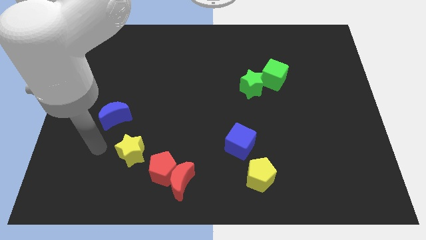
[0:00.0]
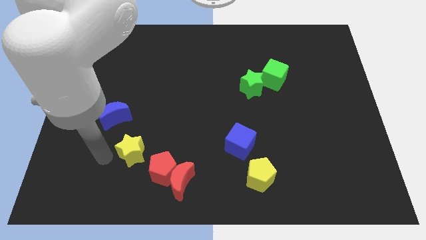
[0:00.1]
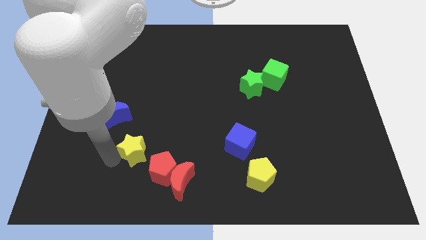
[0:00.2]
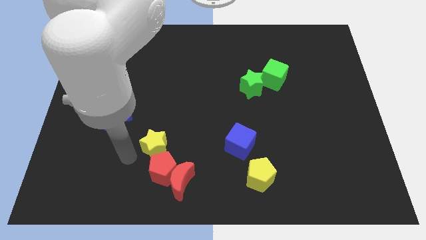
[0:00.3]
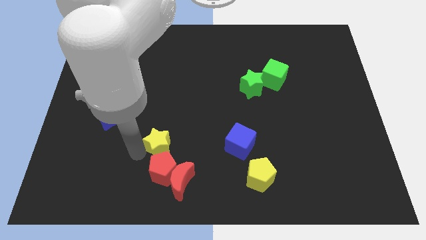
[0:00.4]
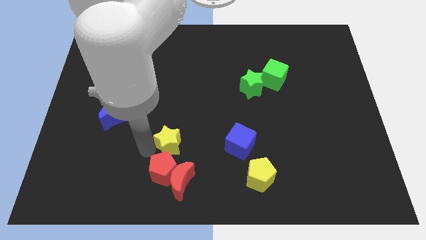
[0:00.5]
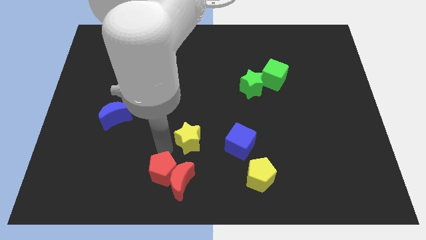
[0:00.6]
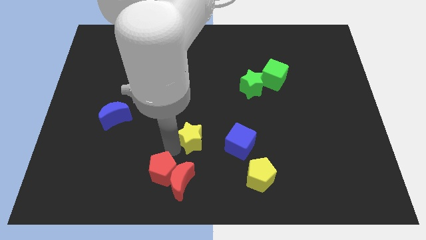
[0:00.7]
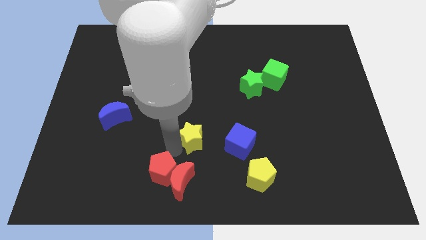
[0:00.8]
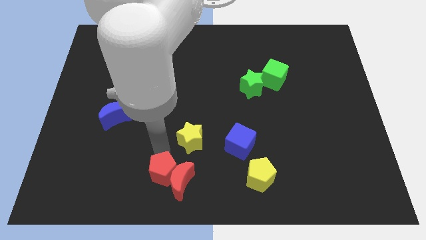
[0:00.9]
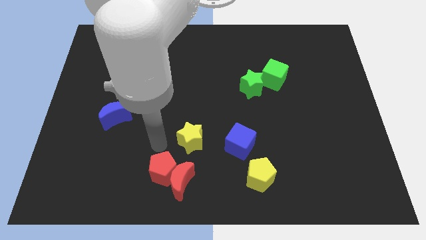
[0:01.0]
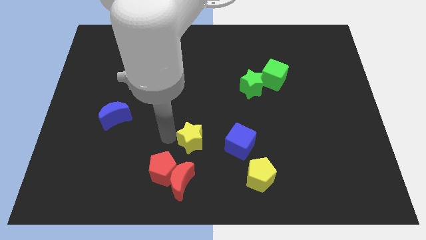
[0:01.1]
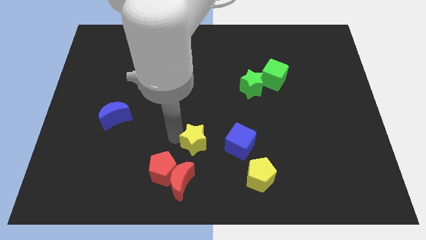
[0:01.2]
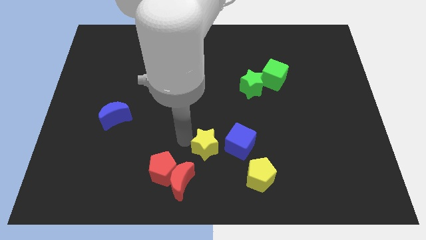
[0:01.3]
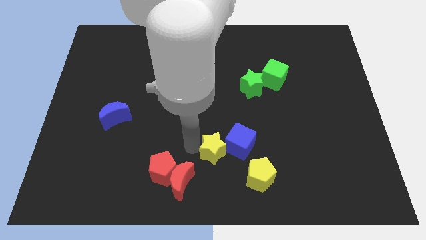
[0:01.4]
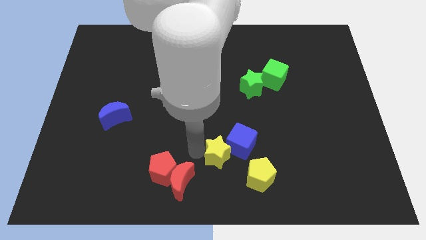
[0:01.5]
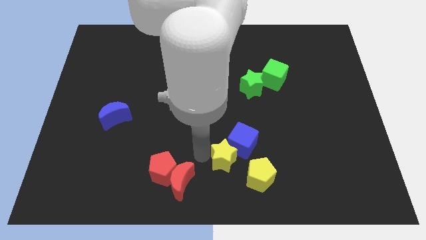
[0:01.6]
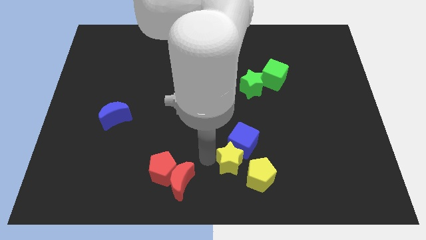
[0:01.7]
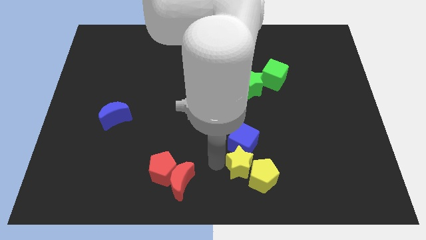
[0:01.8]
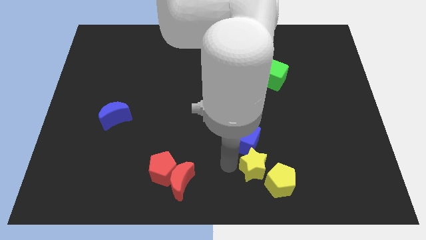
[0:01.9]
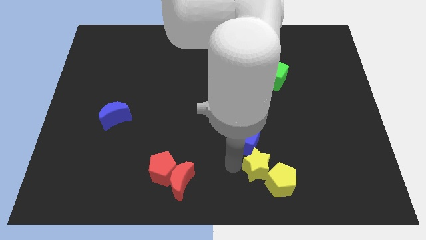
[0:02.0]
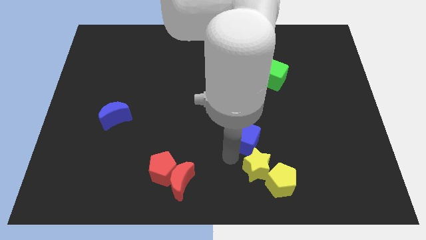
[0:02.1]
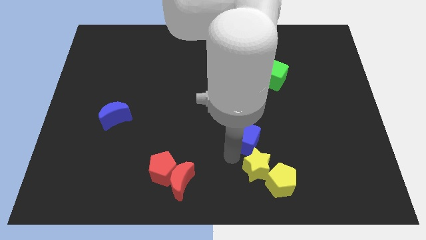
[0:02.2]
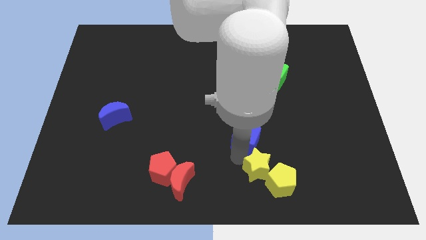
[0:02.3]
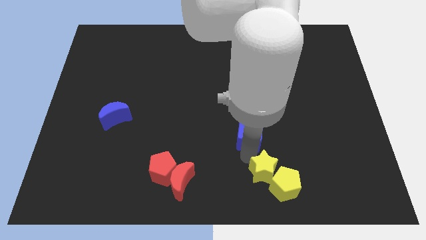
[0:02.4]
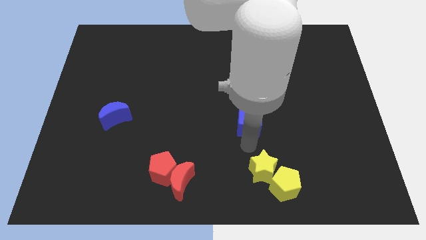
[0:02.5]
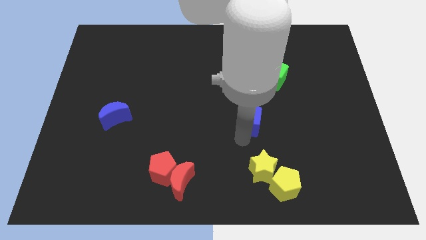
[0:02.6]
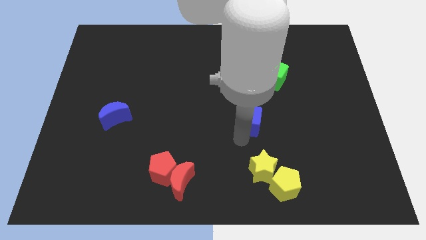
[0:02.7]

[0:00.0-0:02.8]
drag the yellow star and place it above the yellow pentagon

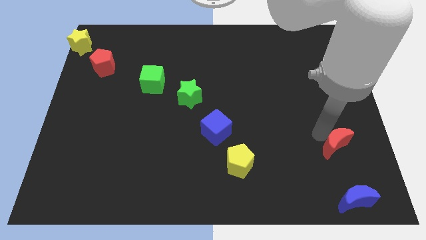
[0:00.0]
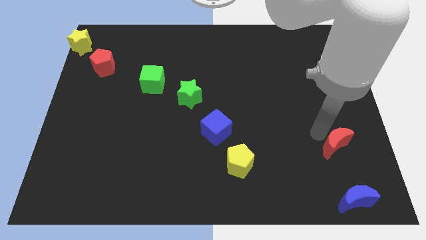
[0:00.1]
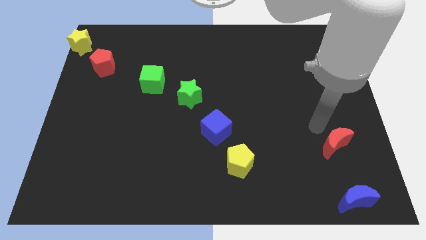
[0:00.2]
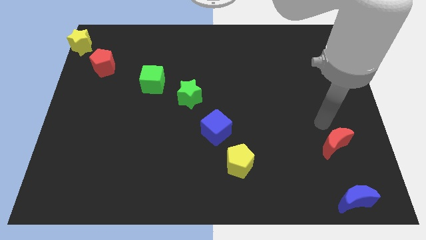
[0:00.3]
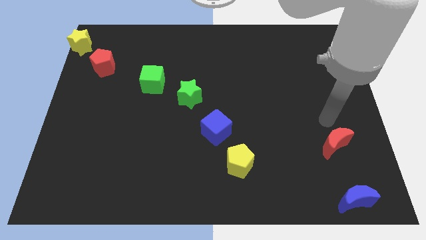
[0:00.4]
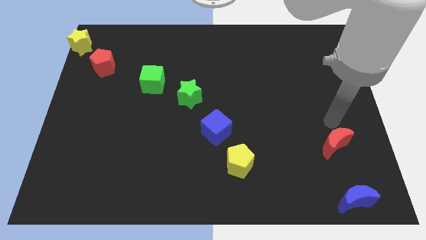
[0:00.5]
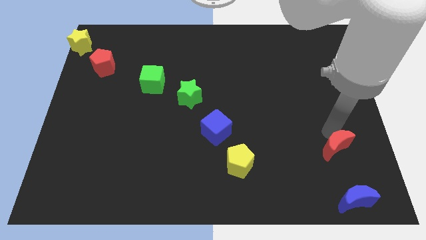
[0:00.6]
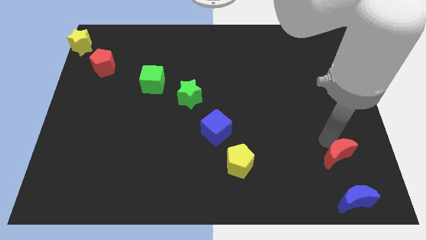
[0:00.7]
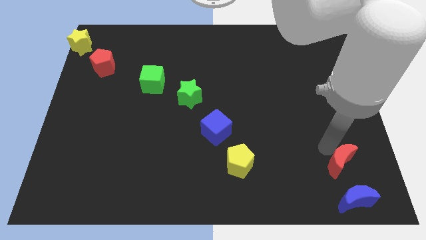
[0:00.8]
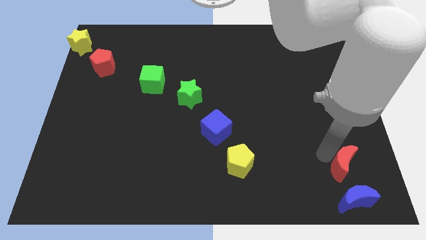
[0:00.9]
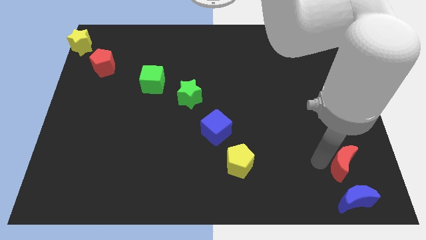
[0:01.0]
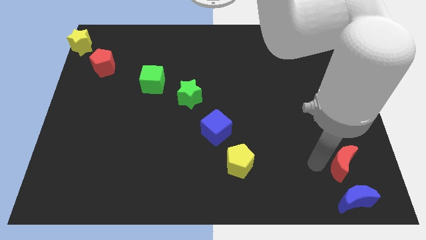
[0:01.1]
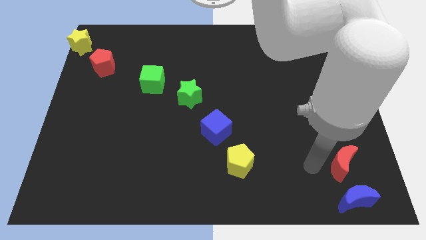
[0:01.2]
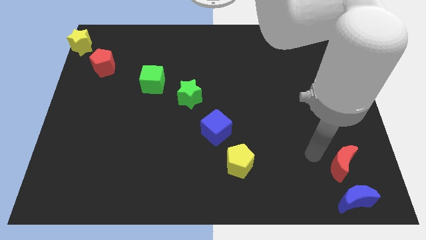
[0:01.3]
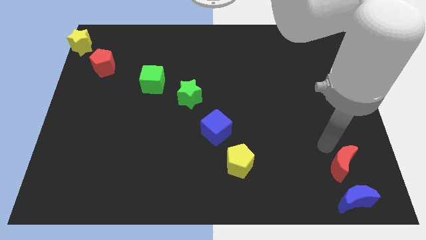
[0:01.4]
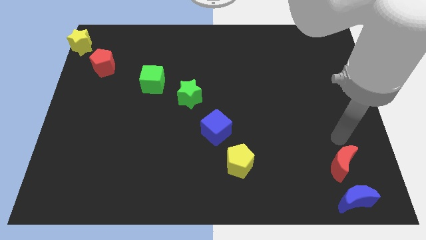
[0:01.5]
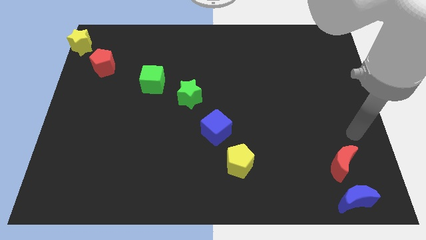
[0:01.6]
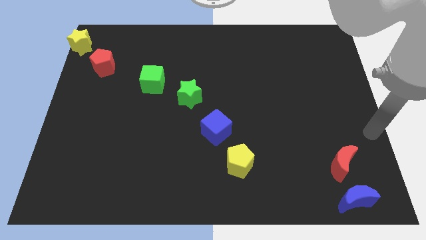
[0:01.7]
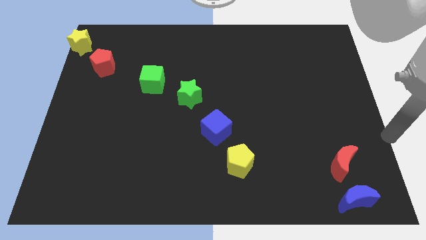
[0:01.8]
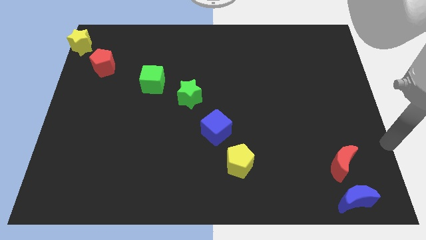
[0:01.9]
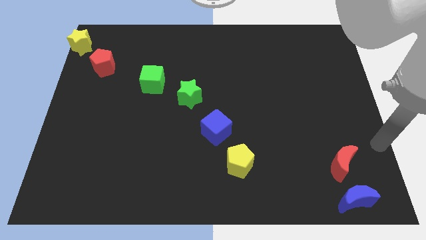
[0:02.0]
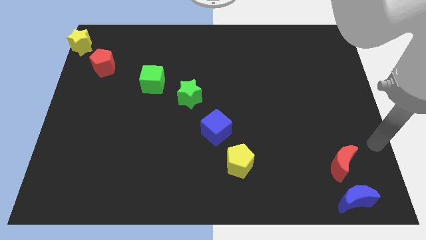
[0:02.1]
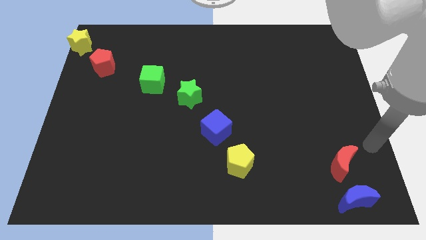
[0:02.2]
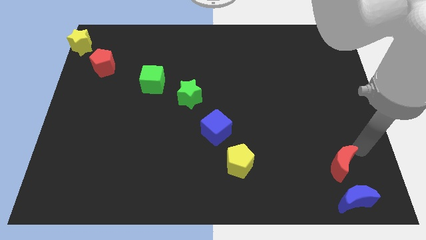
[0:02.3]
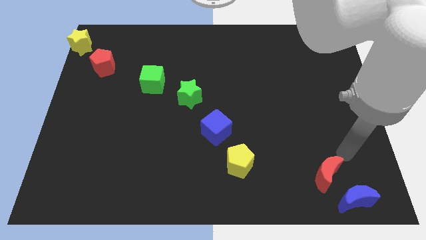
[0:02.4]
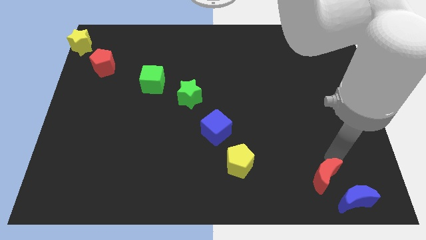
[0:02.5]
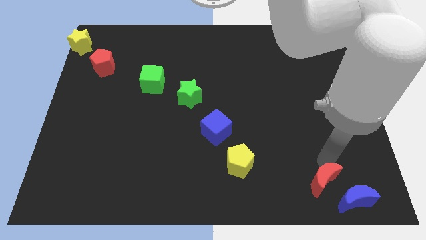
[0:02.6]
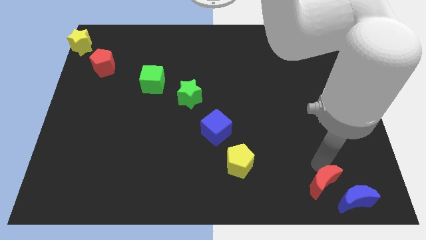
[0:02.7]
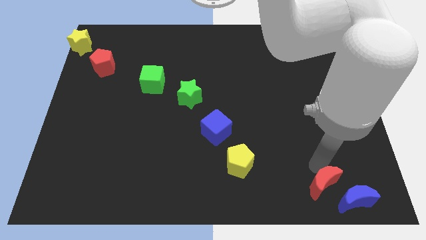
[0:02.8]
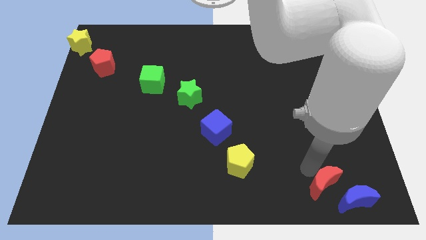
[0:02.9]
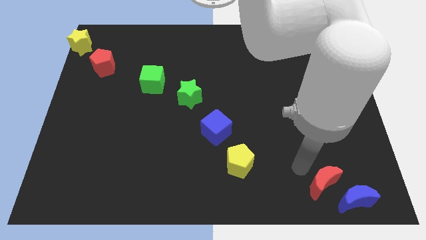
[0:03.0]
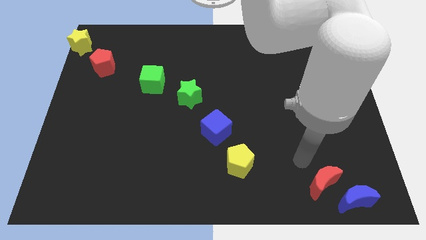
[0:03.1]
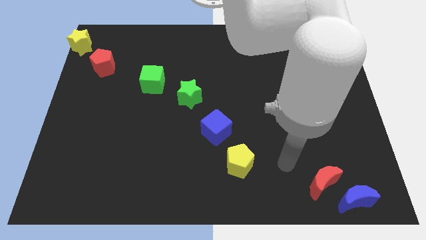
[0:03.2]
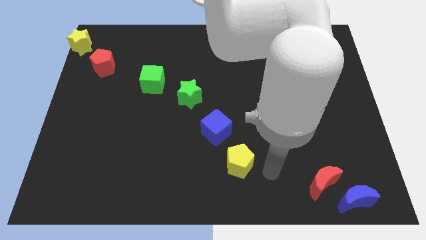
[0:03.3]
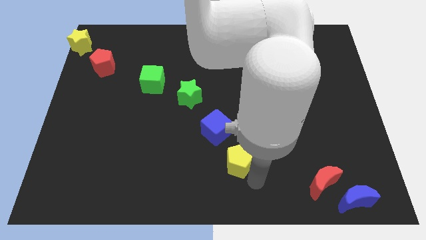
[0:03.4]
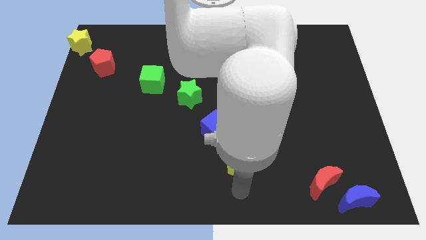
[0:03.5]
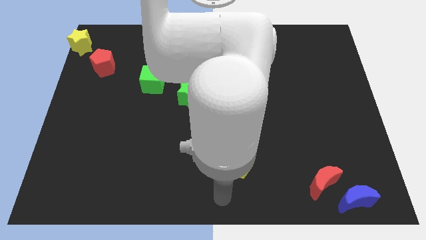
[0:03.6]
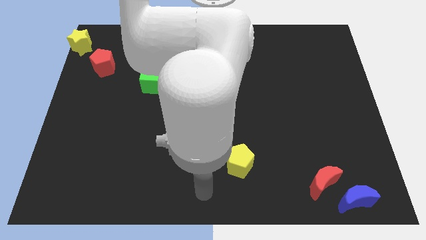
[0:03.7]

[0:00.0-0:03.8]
slide the red moon close to the blue moon

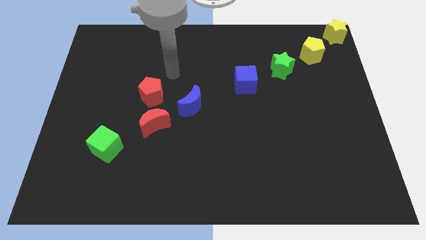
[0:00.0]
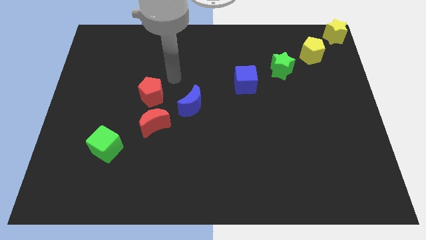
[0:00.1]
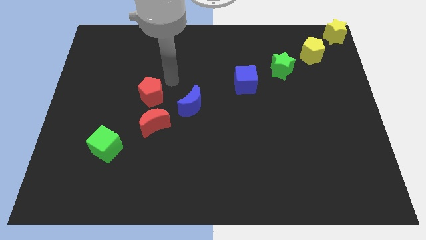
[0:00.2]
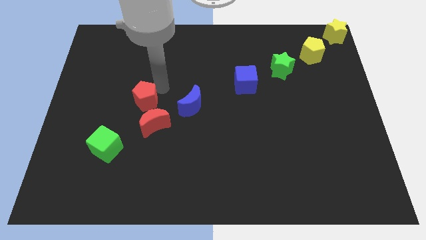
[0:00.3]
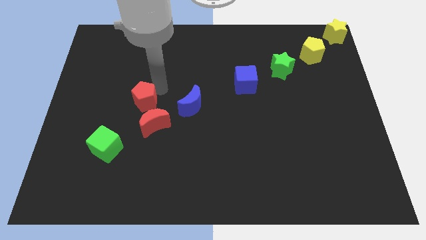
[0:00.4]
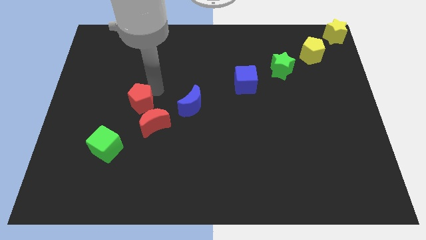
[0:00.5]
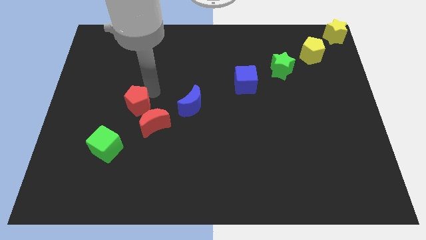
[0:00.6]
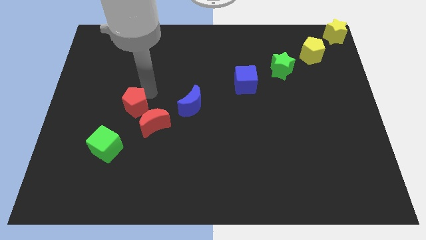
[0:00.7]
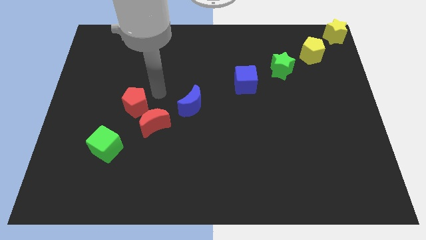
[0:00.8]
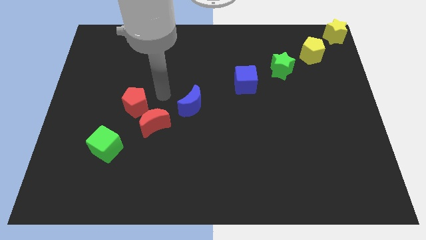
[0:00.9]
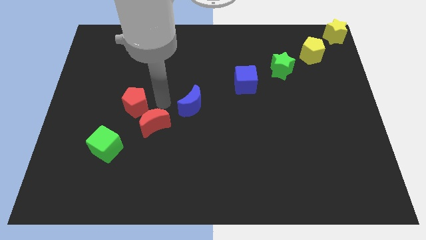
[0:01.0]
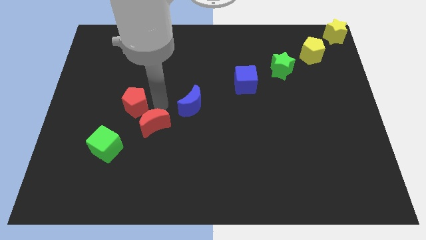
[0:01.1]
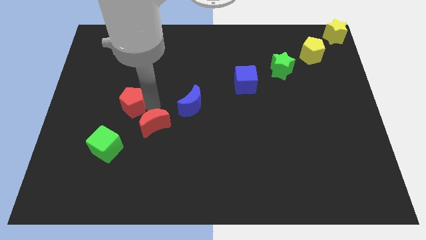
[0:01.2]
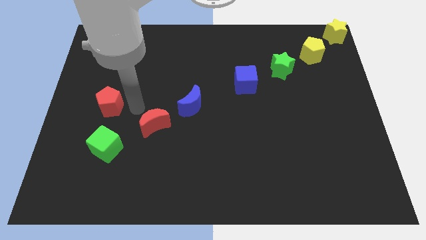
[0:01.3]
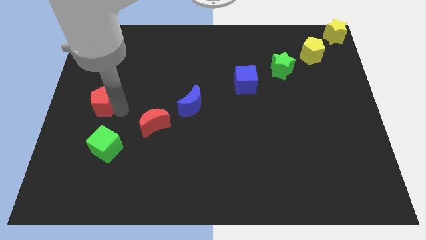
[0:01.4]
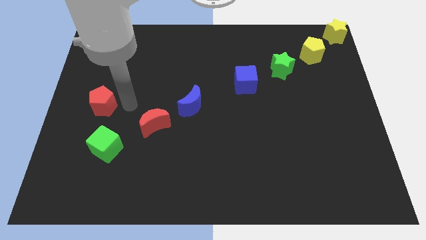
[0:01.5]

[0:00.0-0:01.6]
put the red pentagon above the green cube

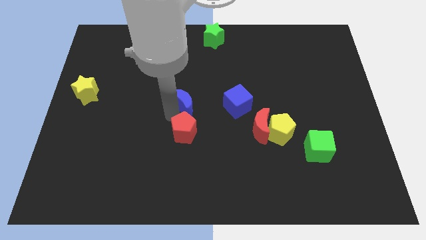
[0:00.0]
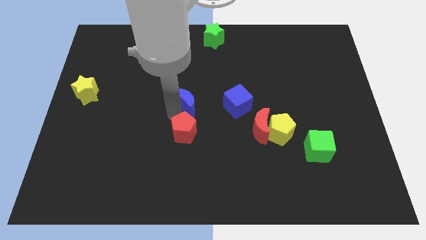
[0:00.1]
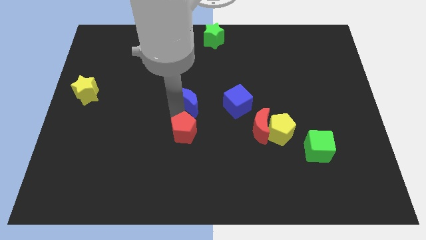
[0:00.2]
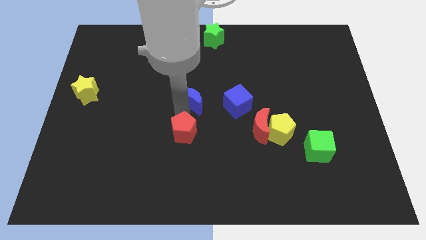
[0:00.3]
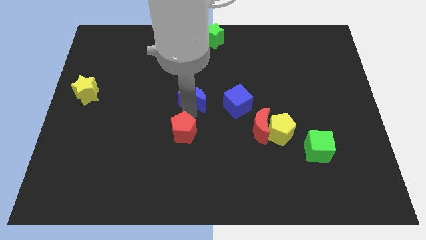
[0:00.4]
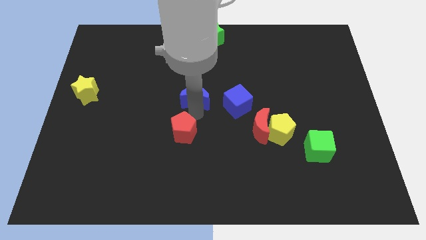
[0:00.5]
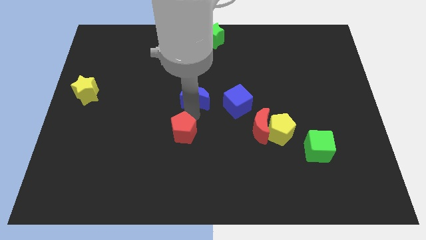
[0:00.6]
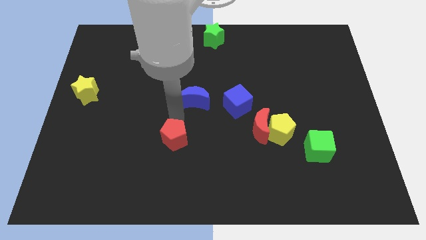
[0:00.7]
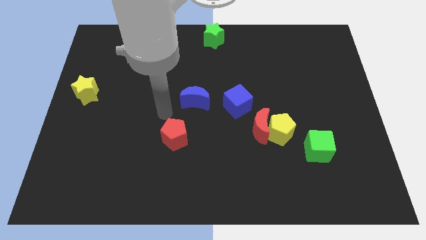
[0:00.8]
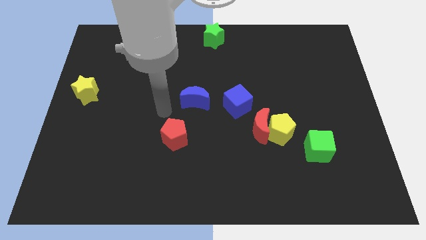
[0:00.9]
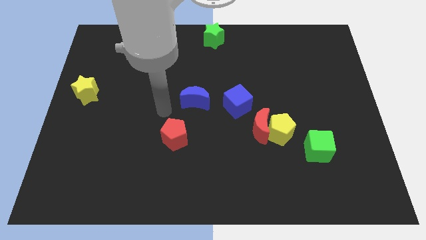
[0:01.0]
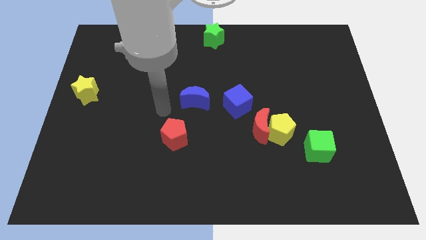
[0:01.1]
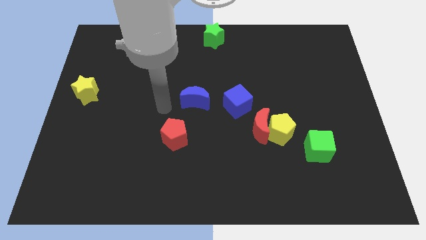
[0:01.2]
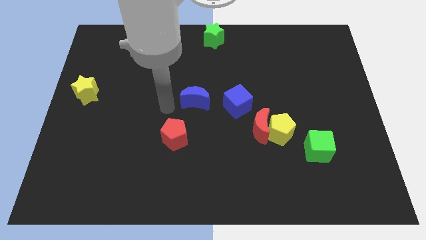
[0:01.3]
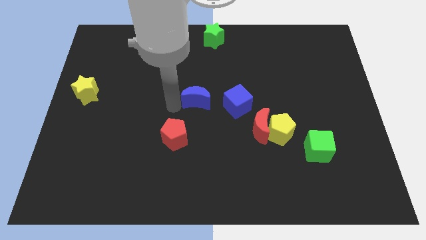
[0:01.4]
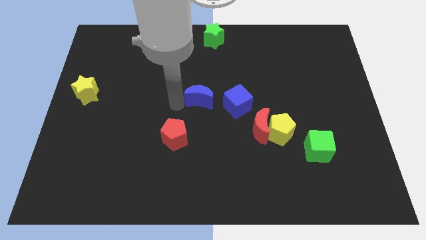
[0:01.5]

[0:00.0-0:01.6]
push the blue crescent to the left of the blue cube
